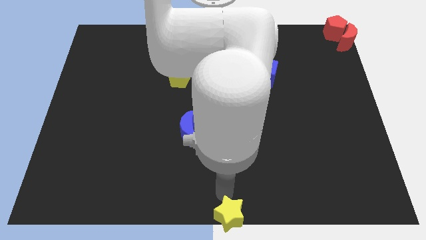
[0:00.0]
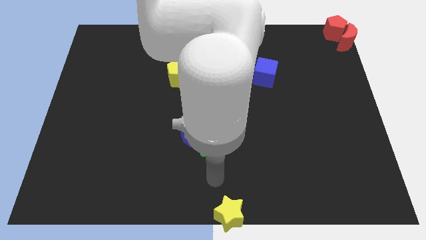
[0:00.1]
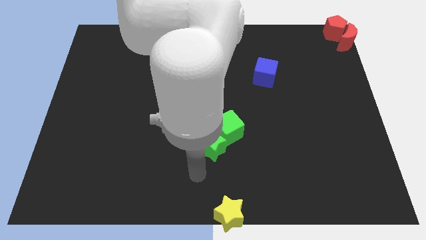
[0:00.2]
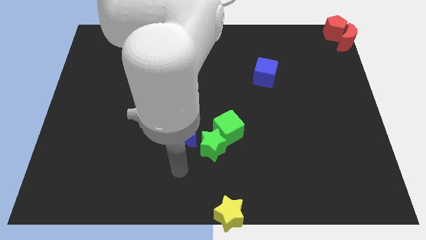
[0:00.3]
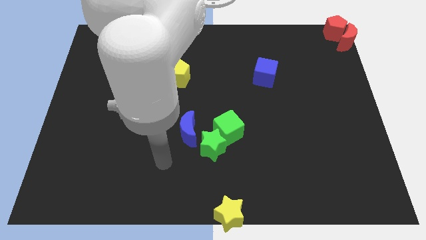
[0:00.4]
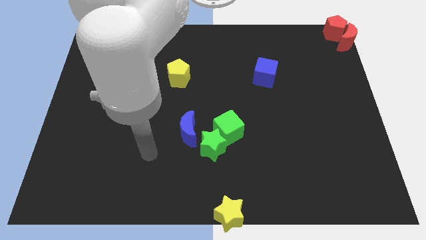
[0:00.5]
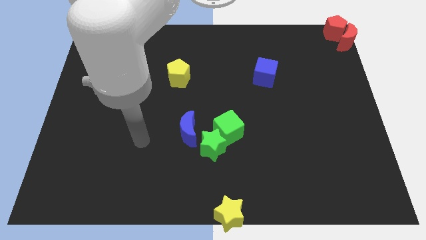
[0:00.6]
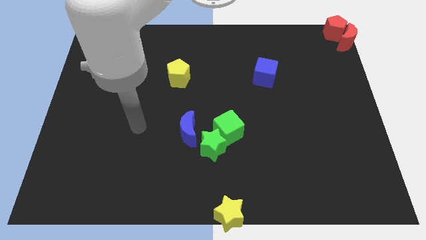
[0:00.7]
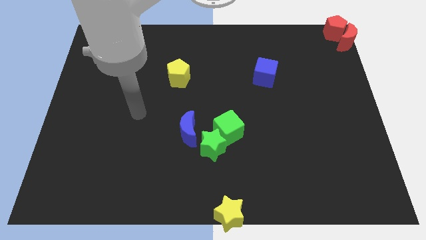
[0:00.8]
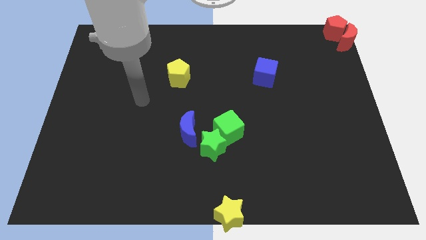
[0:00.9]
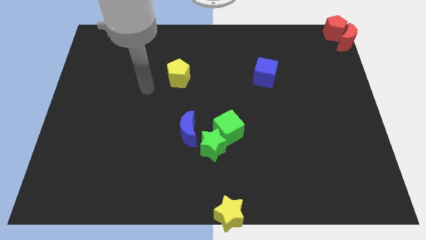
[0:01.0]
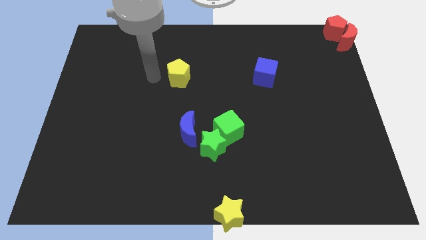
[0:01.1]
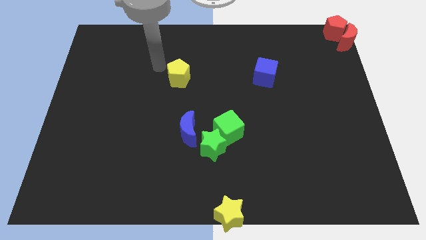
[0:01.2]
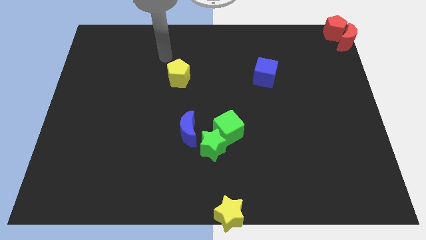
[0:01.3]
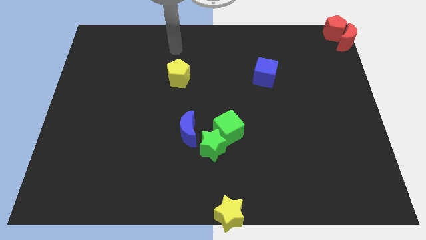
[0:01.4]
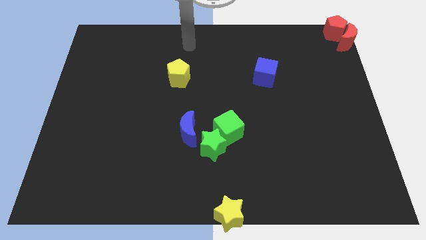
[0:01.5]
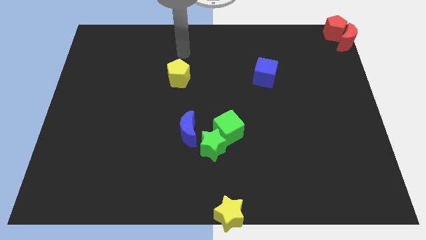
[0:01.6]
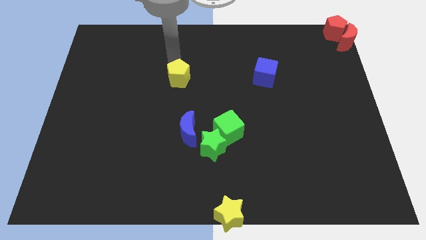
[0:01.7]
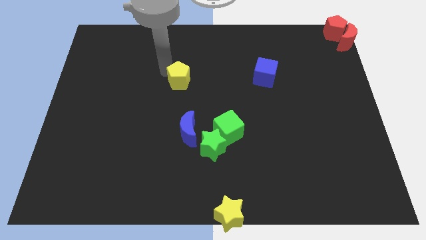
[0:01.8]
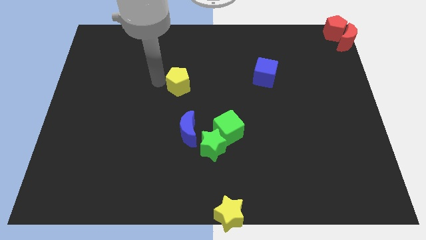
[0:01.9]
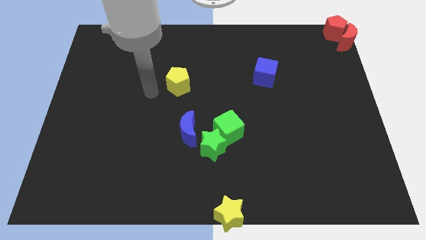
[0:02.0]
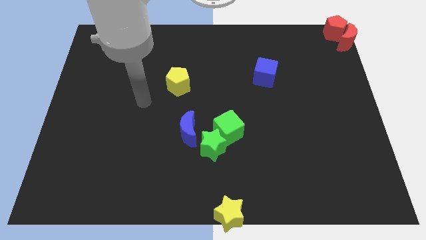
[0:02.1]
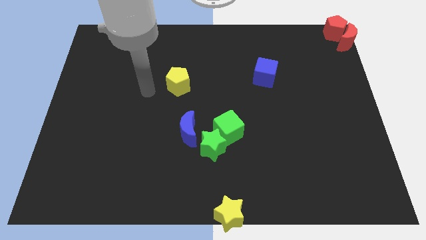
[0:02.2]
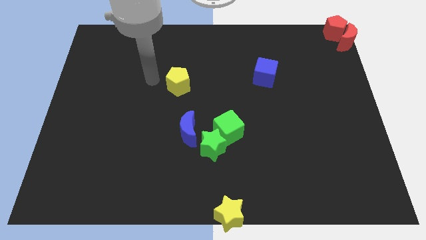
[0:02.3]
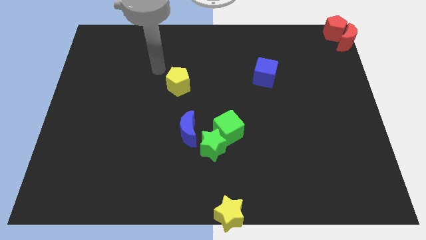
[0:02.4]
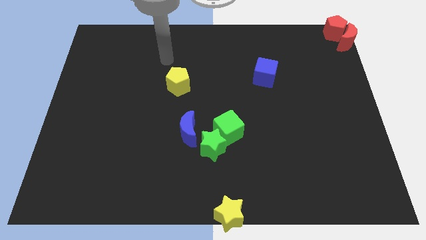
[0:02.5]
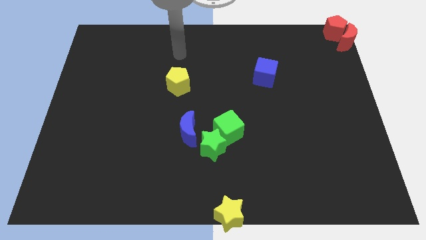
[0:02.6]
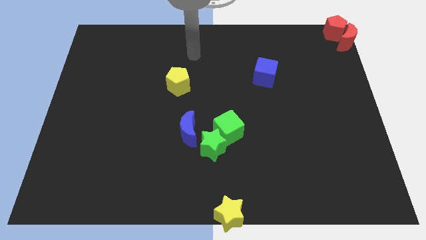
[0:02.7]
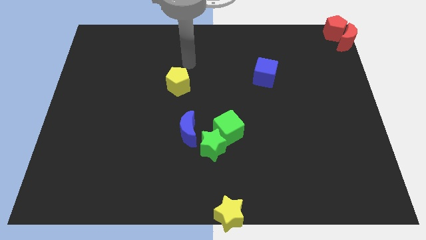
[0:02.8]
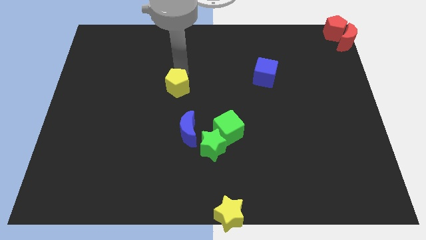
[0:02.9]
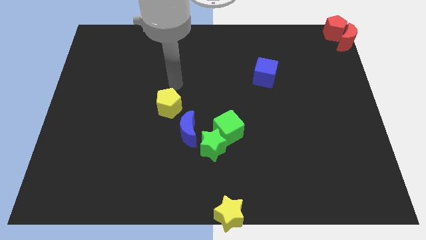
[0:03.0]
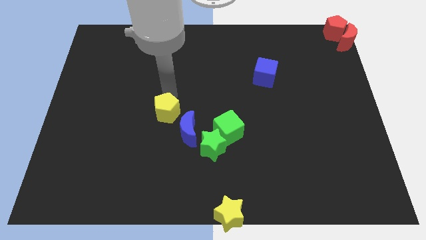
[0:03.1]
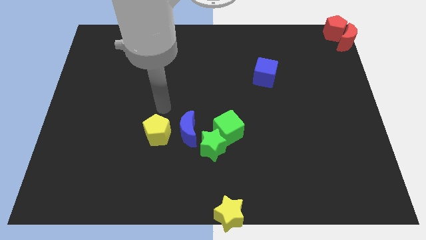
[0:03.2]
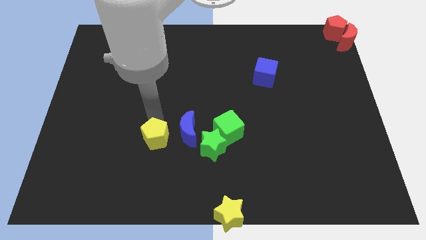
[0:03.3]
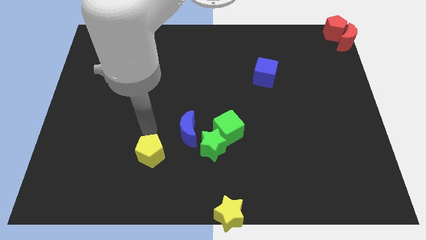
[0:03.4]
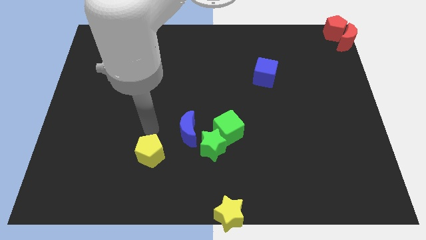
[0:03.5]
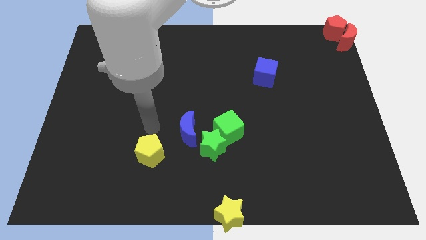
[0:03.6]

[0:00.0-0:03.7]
move the yellow pentagon bottom left to the blue moon

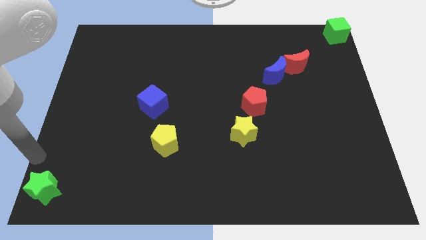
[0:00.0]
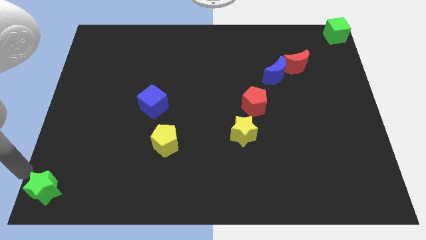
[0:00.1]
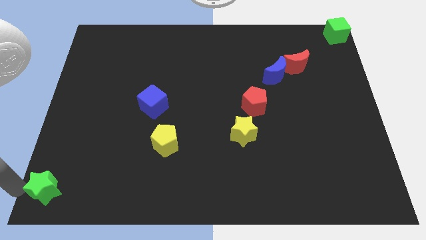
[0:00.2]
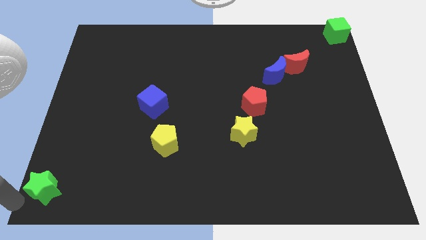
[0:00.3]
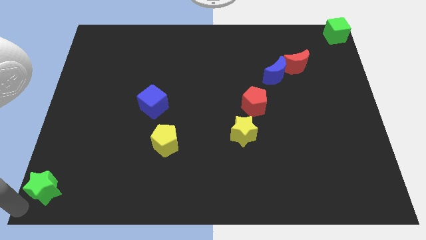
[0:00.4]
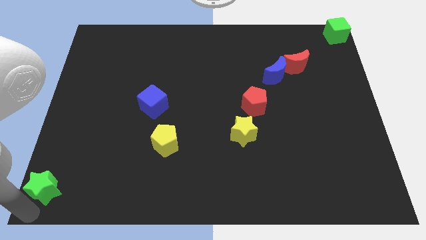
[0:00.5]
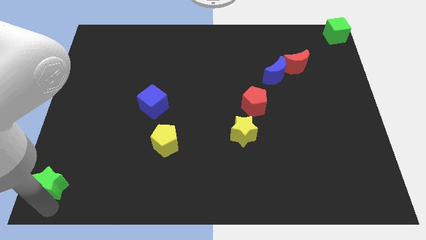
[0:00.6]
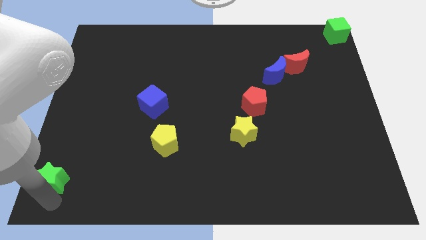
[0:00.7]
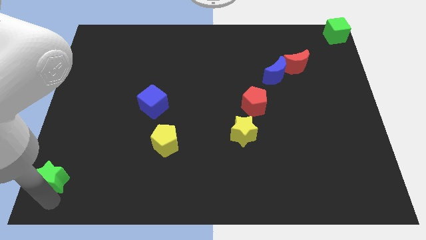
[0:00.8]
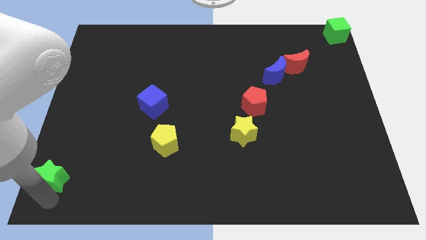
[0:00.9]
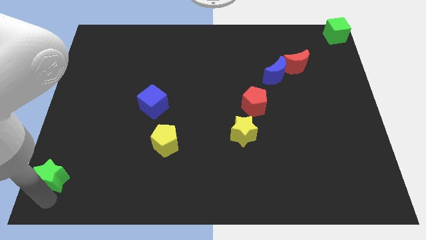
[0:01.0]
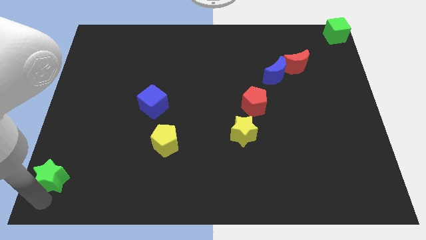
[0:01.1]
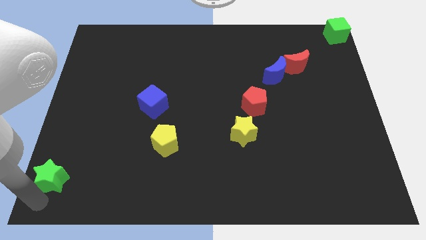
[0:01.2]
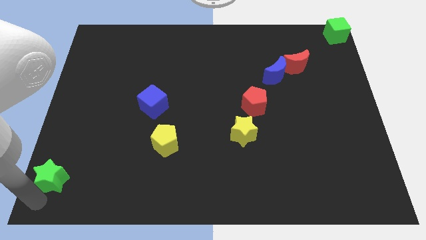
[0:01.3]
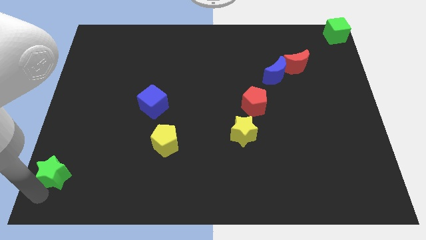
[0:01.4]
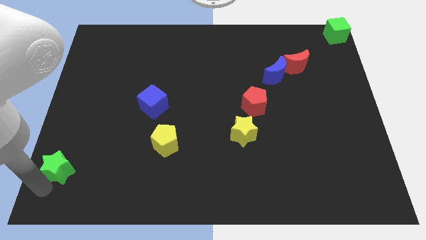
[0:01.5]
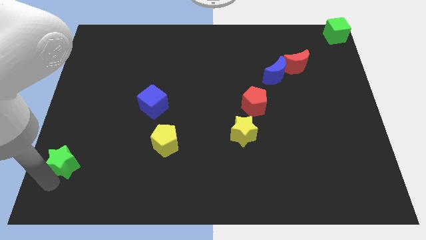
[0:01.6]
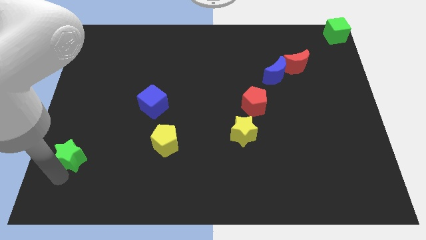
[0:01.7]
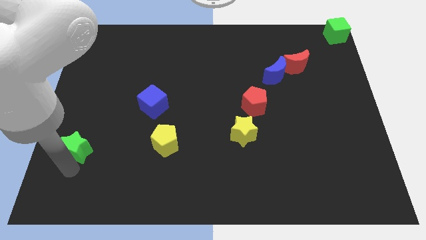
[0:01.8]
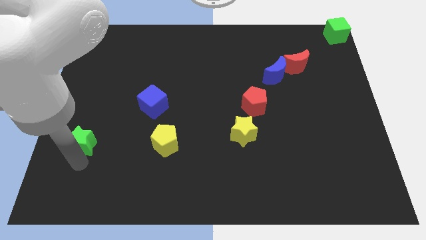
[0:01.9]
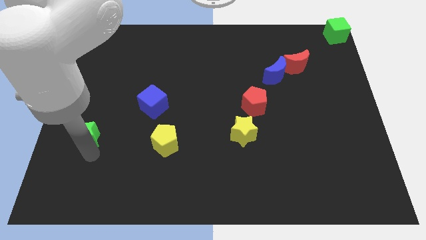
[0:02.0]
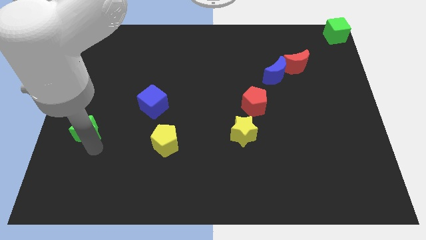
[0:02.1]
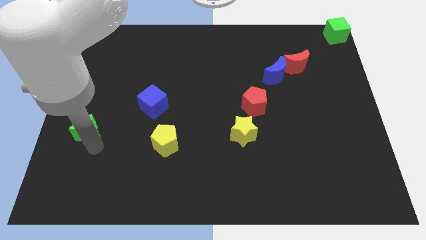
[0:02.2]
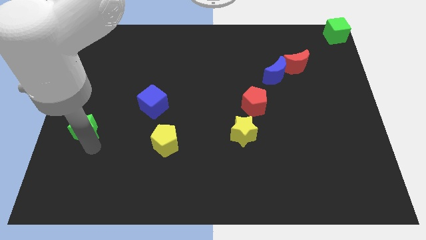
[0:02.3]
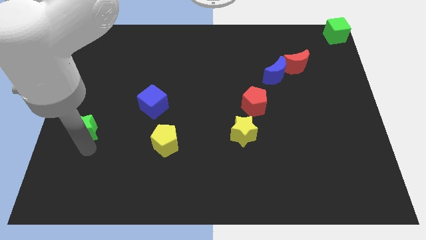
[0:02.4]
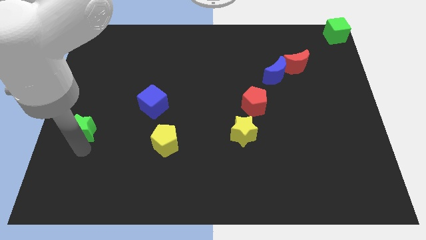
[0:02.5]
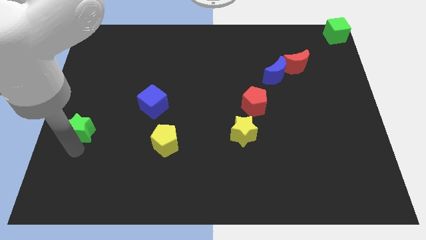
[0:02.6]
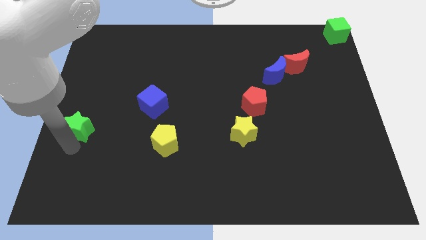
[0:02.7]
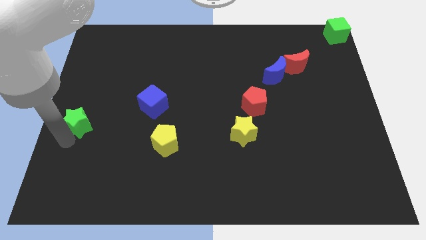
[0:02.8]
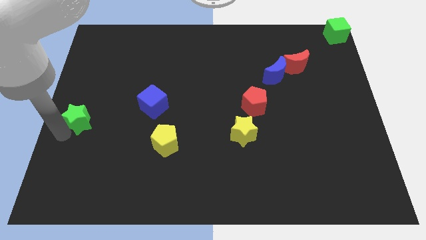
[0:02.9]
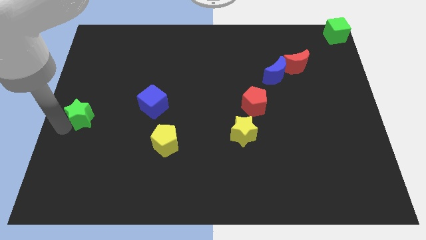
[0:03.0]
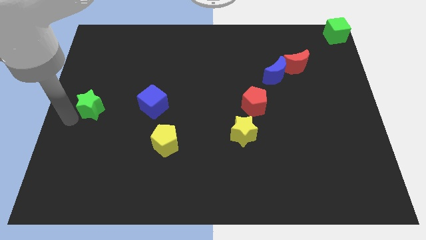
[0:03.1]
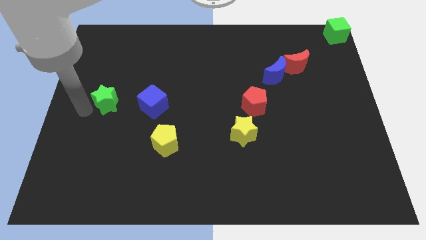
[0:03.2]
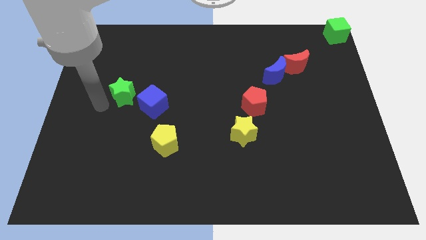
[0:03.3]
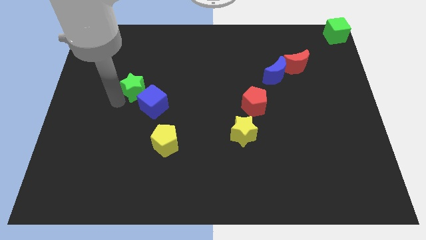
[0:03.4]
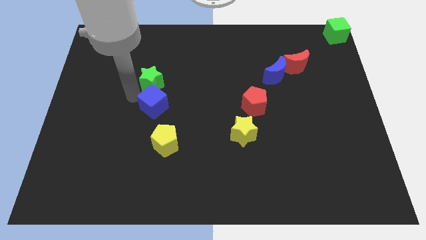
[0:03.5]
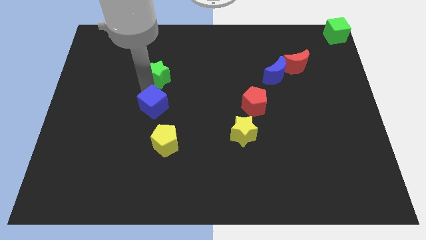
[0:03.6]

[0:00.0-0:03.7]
push the green star to the top side of the blue cube

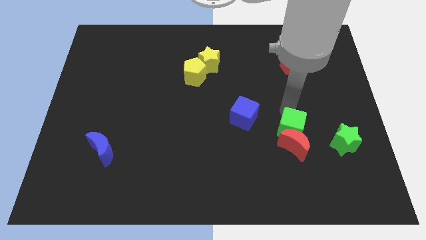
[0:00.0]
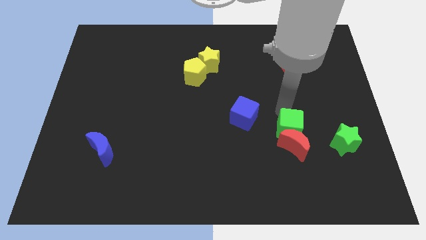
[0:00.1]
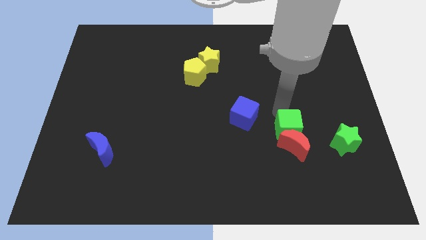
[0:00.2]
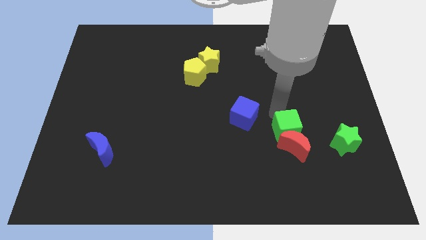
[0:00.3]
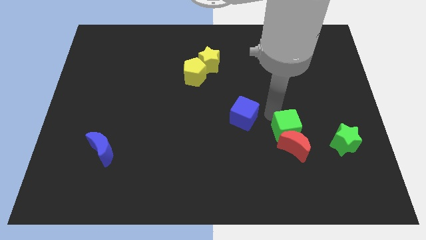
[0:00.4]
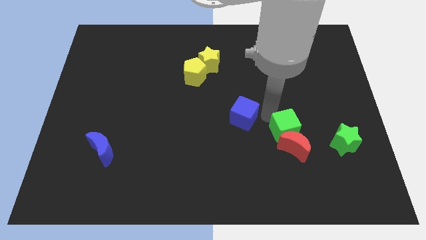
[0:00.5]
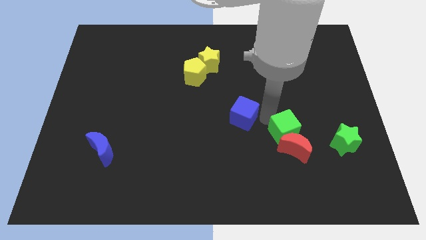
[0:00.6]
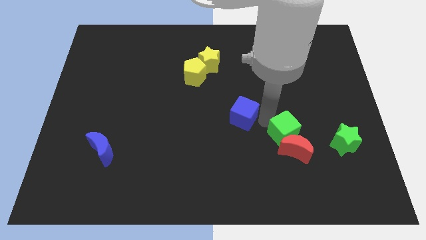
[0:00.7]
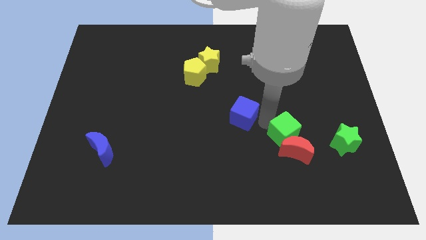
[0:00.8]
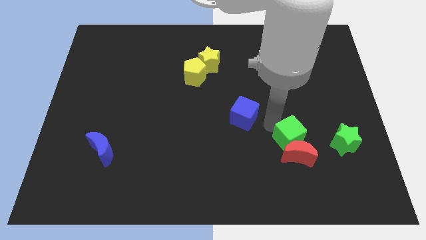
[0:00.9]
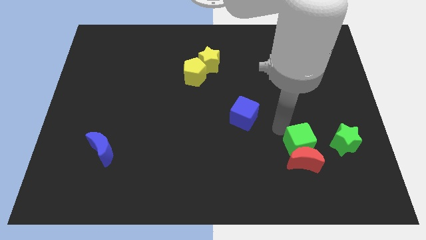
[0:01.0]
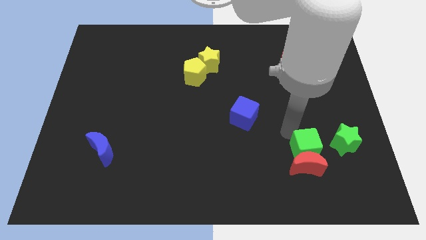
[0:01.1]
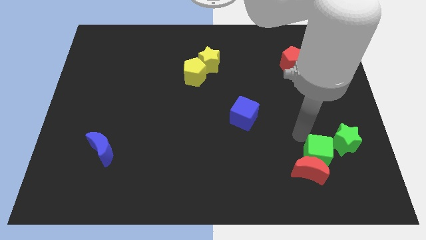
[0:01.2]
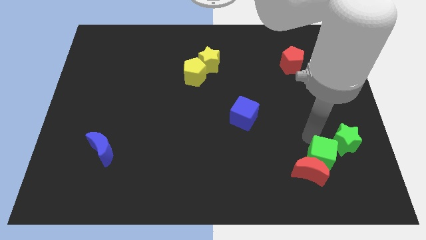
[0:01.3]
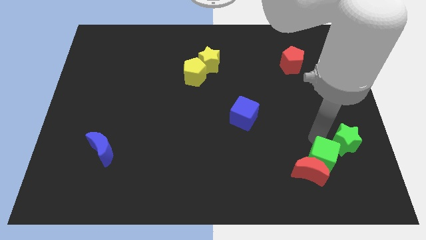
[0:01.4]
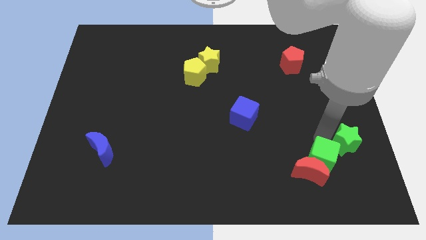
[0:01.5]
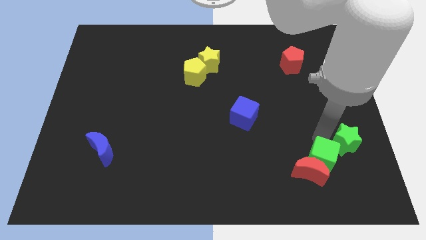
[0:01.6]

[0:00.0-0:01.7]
move the green cube and the red moon to the bottom left side of the green star
